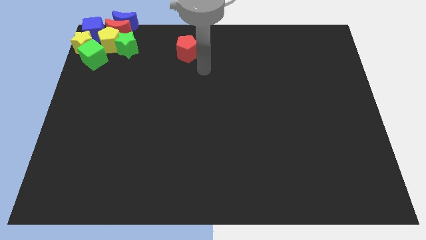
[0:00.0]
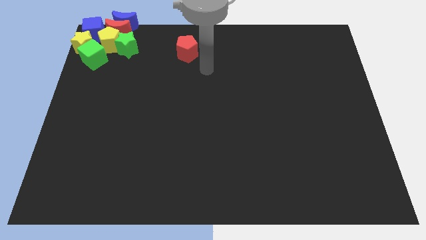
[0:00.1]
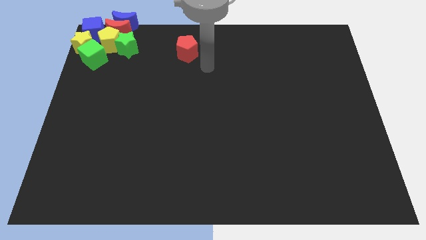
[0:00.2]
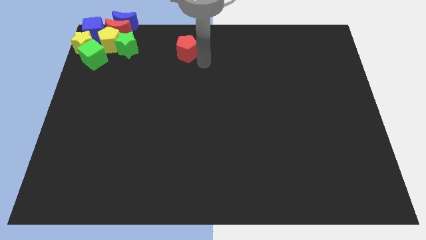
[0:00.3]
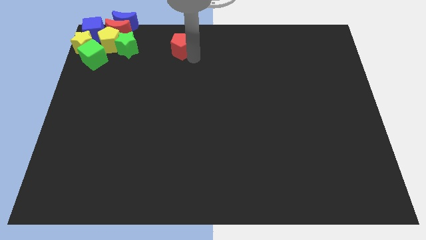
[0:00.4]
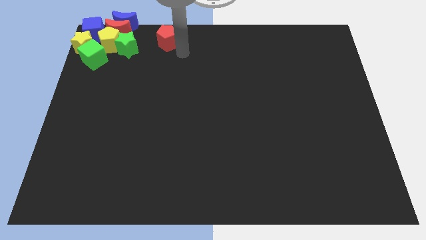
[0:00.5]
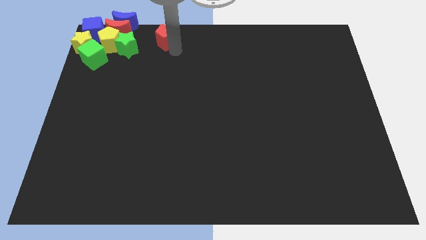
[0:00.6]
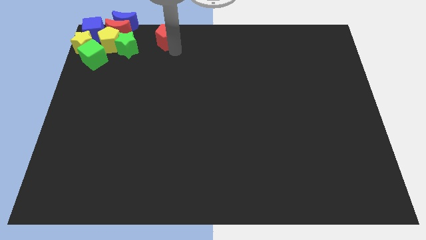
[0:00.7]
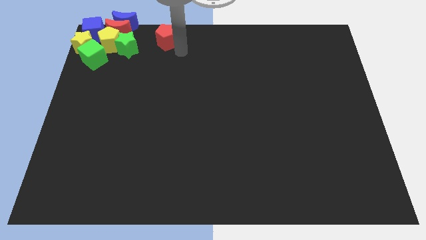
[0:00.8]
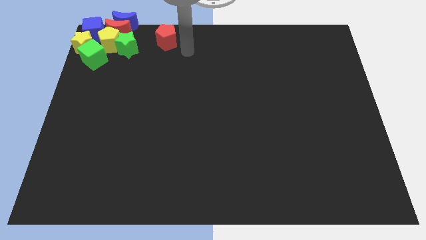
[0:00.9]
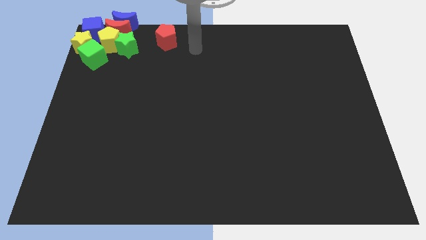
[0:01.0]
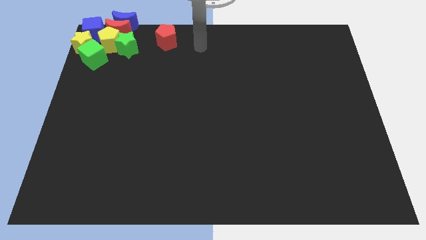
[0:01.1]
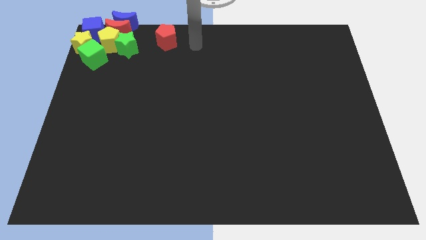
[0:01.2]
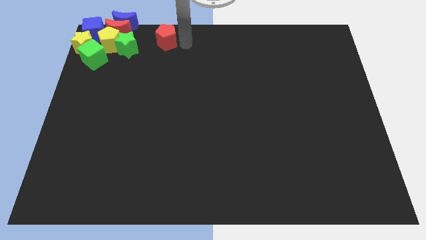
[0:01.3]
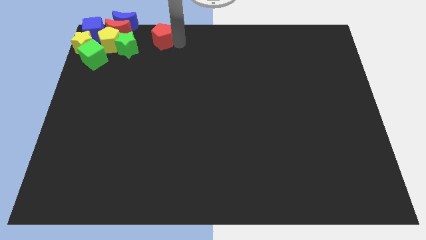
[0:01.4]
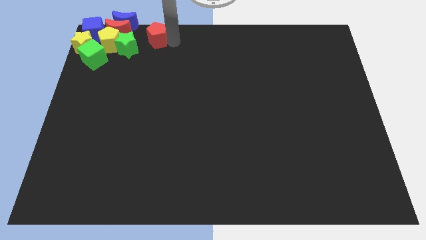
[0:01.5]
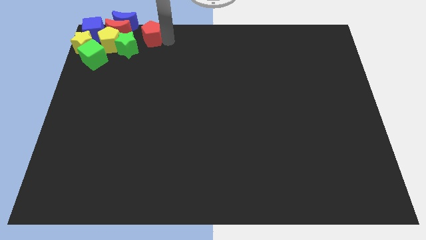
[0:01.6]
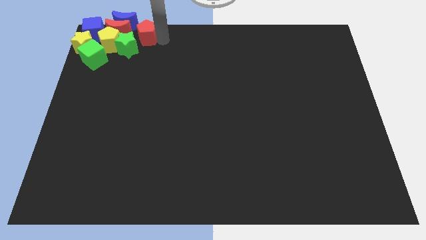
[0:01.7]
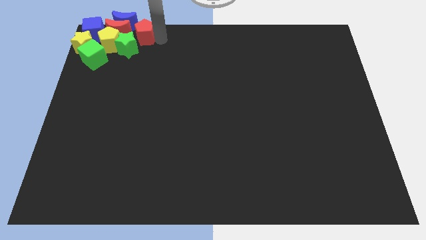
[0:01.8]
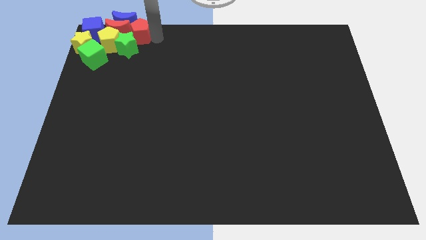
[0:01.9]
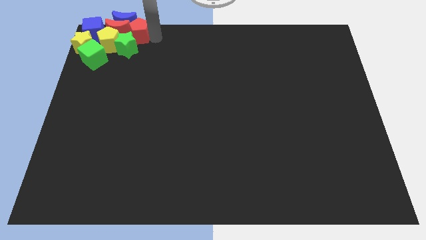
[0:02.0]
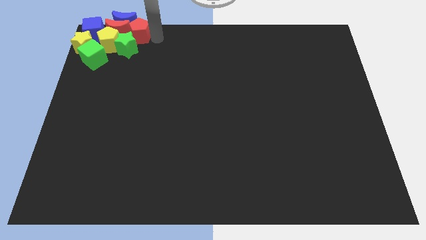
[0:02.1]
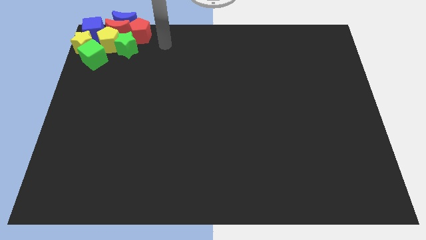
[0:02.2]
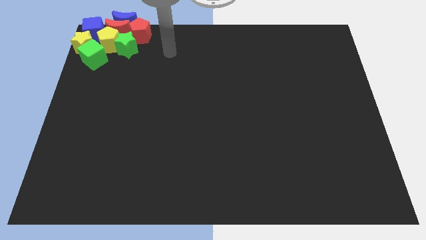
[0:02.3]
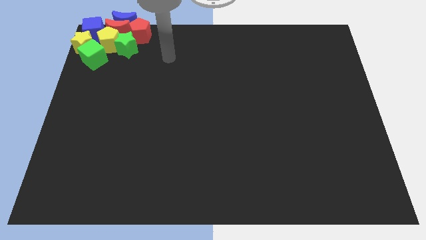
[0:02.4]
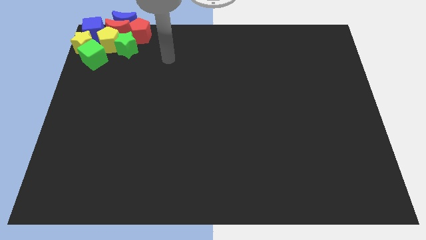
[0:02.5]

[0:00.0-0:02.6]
push red pentagon to the right of the red crescent

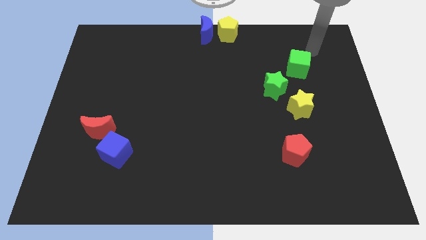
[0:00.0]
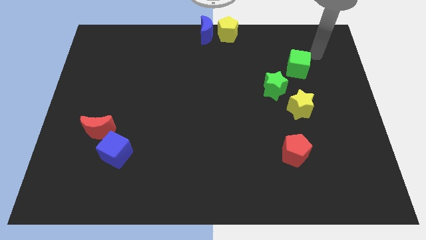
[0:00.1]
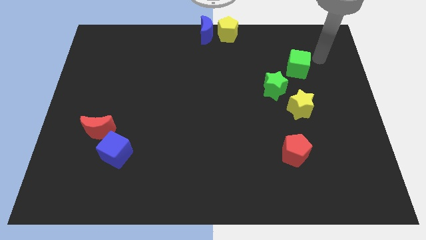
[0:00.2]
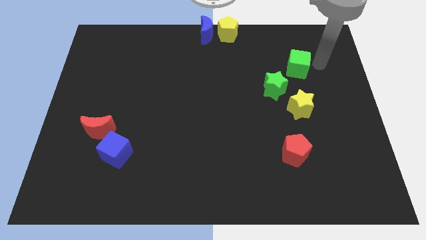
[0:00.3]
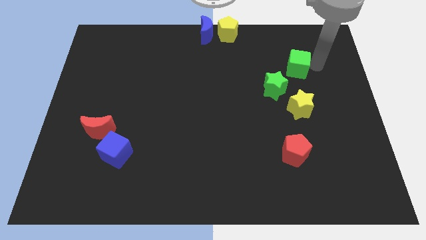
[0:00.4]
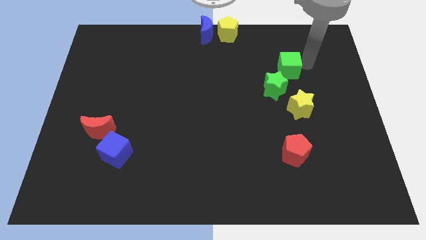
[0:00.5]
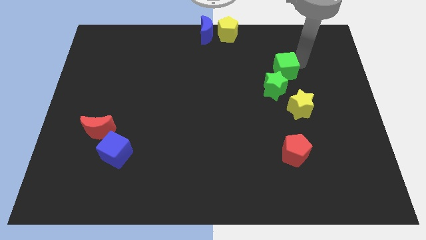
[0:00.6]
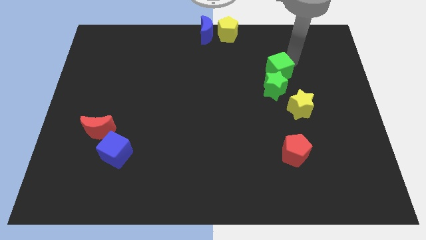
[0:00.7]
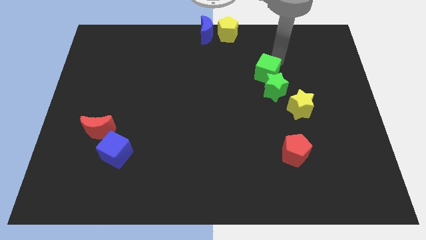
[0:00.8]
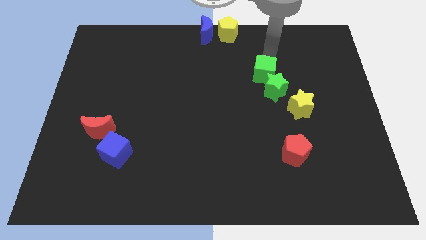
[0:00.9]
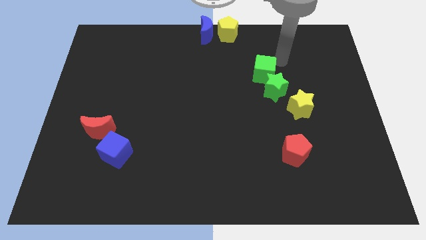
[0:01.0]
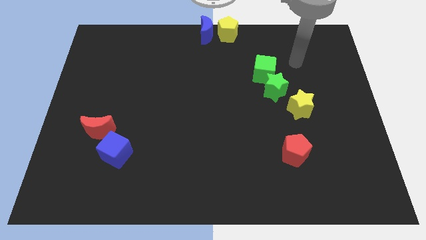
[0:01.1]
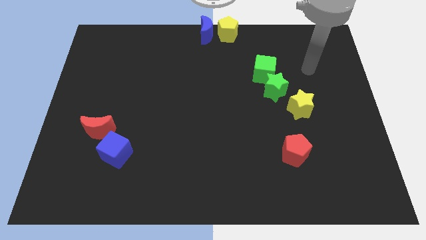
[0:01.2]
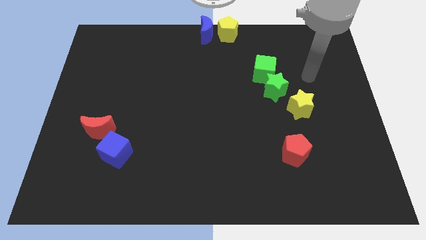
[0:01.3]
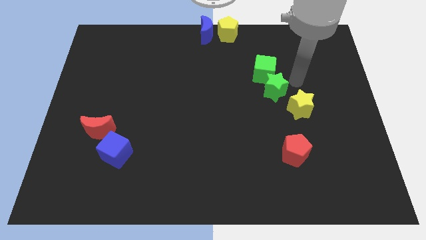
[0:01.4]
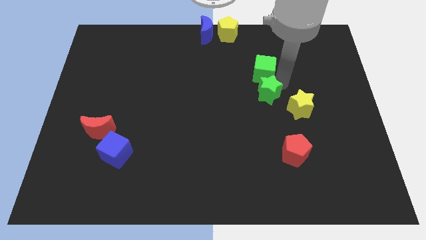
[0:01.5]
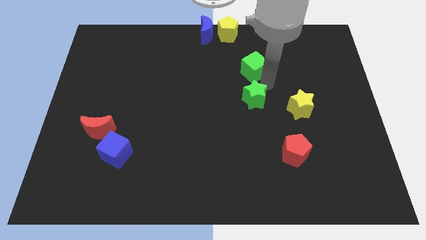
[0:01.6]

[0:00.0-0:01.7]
move the green star below the green cube

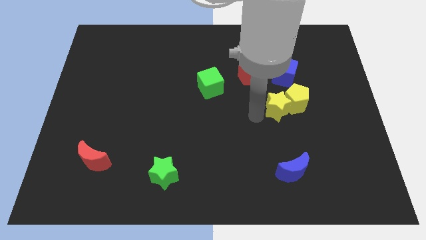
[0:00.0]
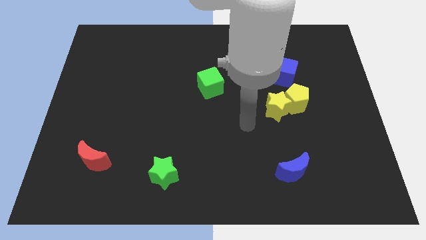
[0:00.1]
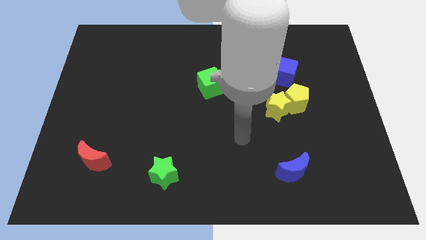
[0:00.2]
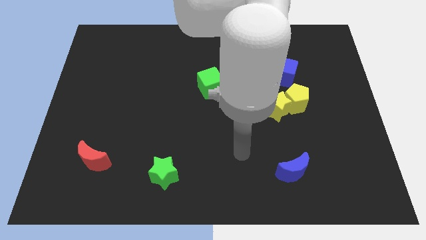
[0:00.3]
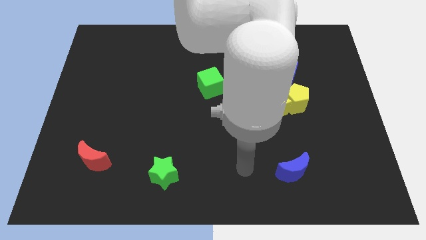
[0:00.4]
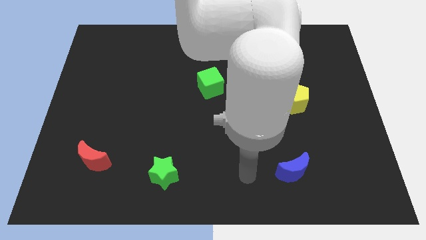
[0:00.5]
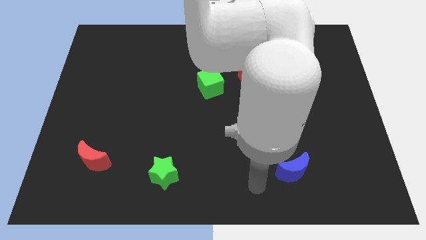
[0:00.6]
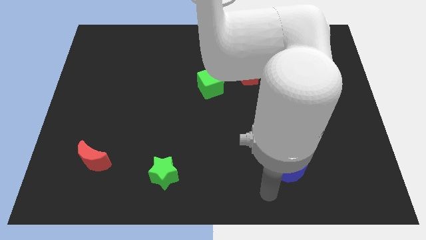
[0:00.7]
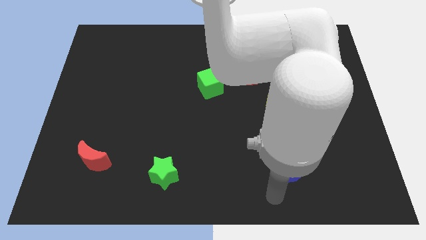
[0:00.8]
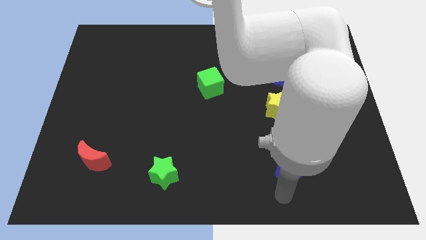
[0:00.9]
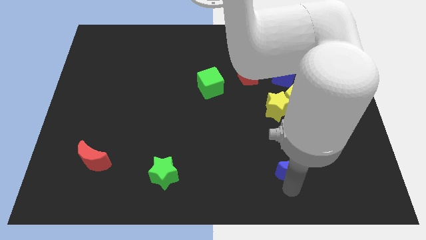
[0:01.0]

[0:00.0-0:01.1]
touch the bottom side of the blue crescent

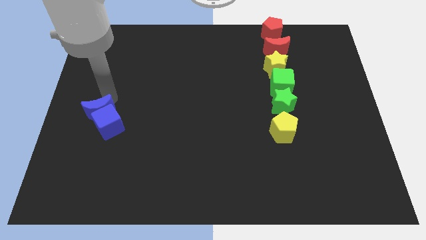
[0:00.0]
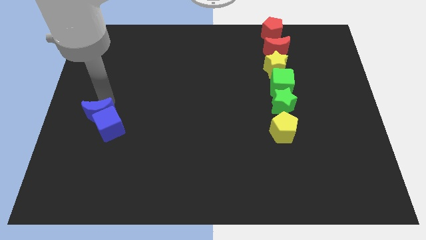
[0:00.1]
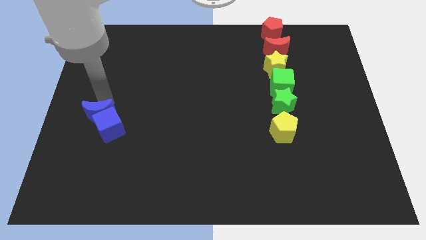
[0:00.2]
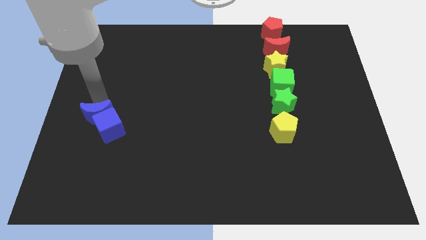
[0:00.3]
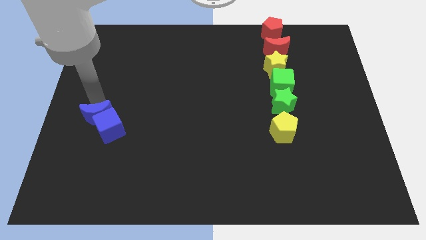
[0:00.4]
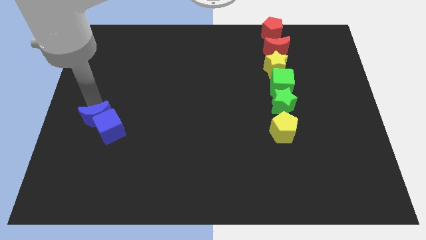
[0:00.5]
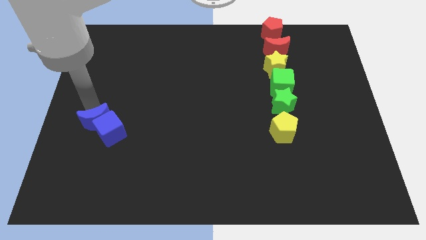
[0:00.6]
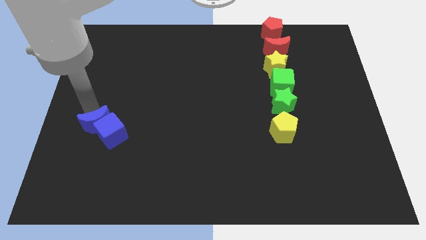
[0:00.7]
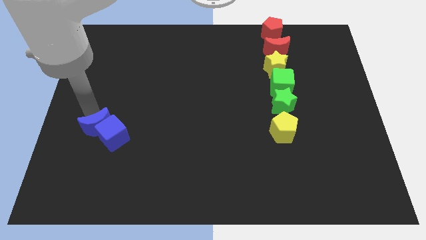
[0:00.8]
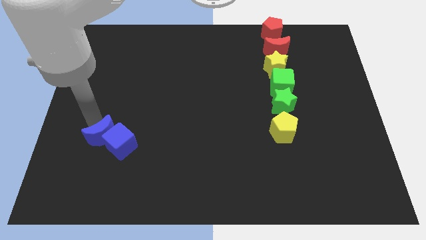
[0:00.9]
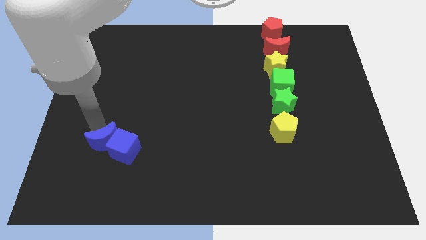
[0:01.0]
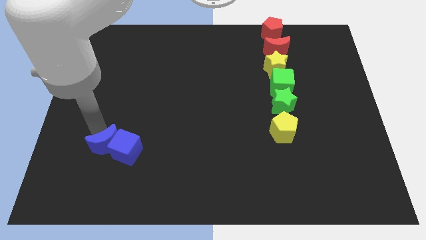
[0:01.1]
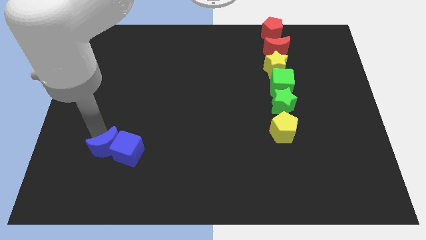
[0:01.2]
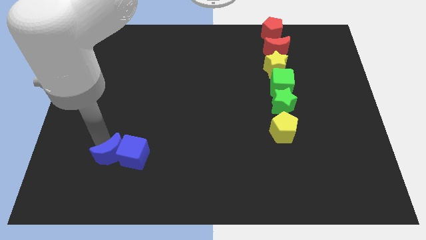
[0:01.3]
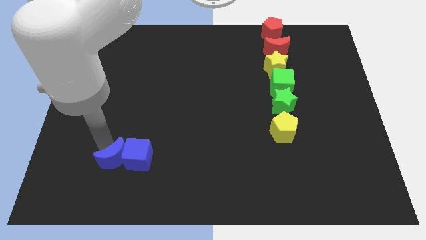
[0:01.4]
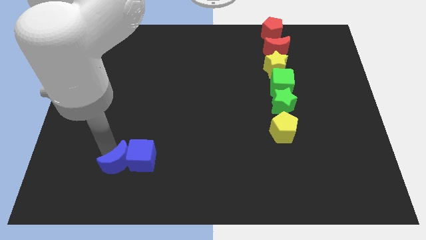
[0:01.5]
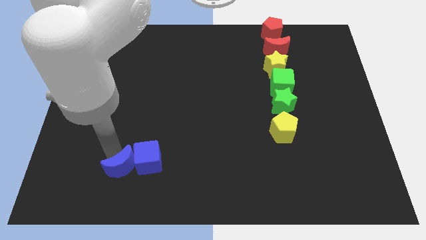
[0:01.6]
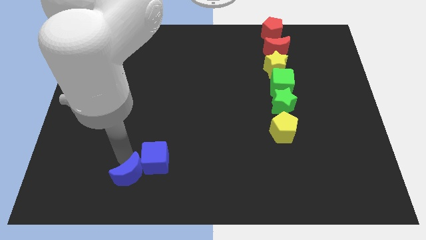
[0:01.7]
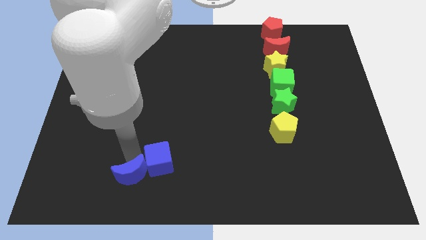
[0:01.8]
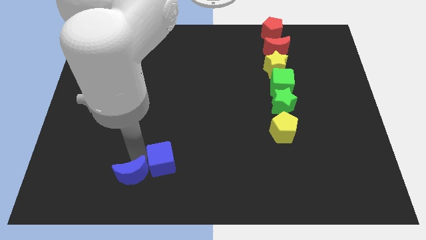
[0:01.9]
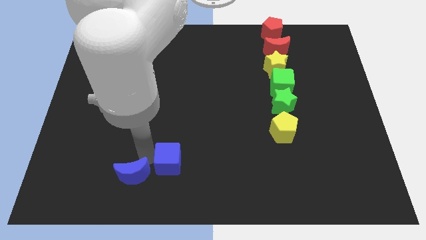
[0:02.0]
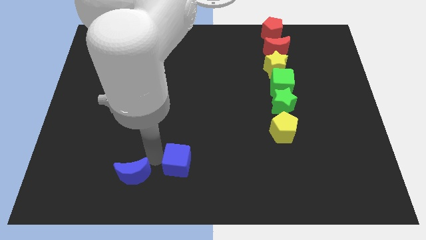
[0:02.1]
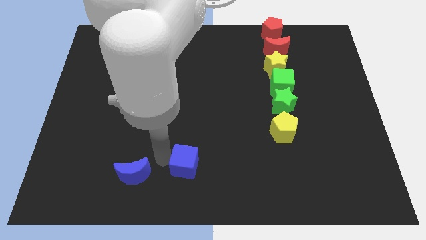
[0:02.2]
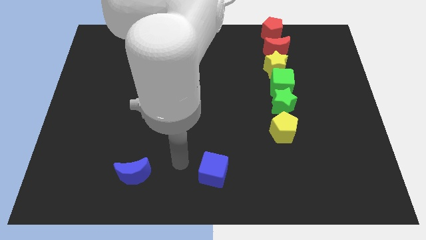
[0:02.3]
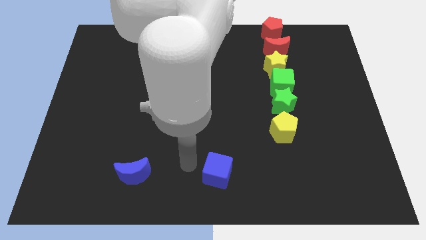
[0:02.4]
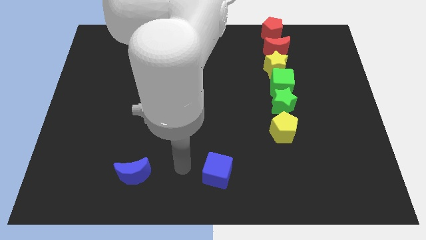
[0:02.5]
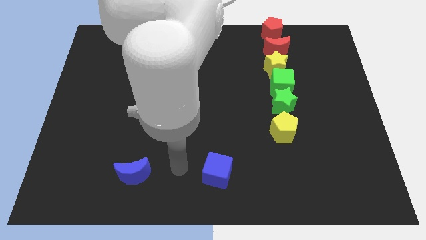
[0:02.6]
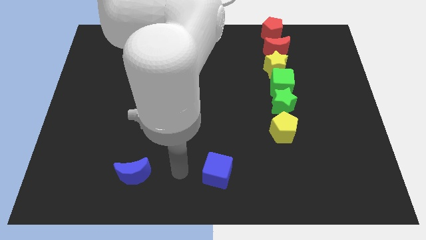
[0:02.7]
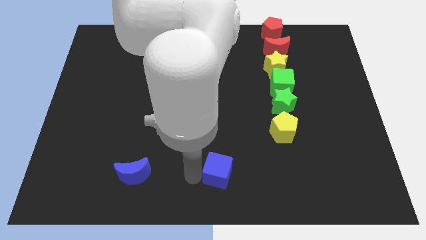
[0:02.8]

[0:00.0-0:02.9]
push blue moon and blue cube downwards

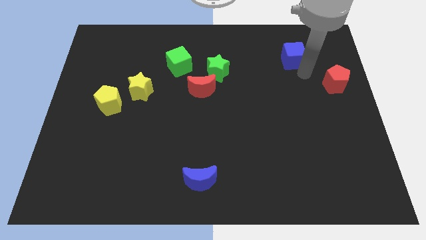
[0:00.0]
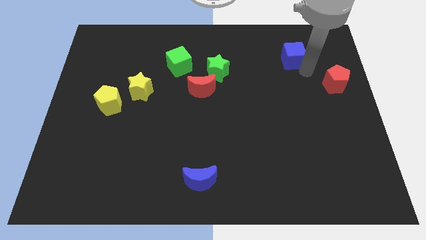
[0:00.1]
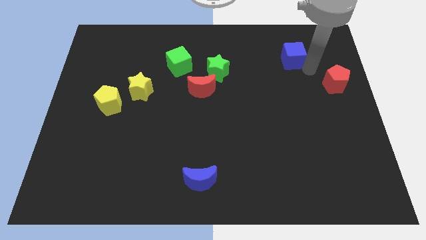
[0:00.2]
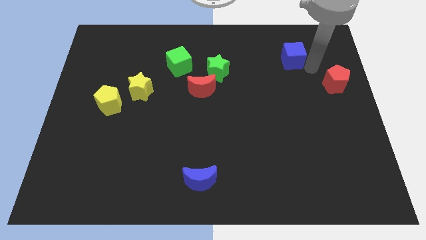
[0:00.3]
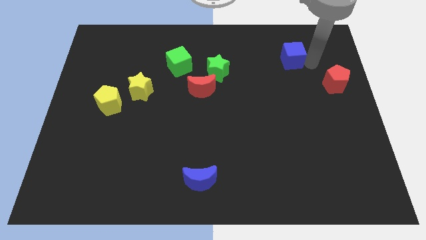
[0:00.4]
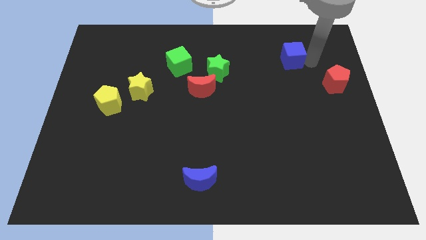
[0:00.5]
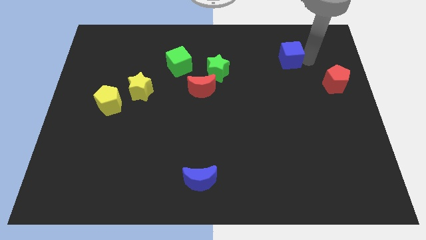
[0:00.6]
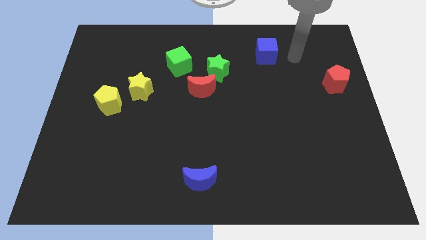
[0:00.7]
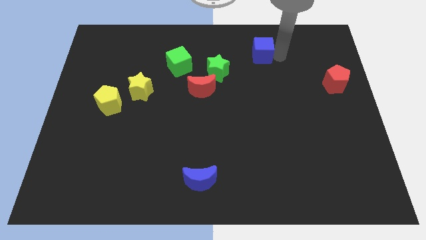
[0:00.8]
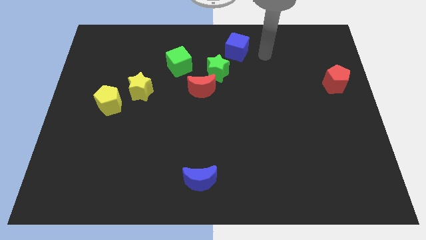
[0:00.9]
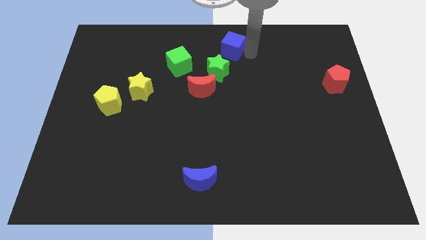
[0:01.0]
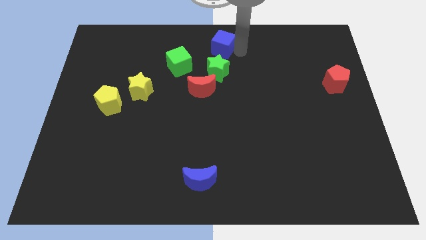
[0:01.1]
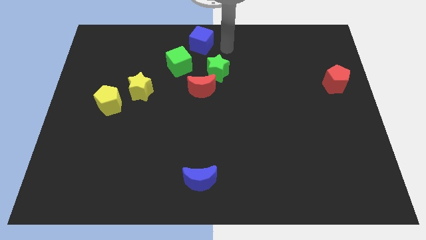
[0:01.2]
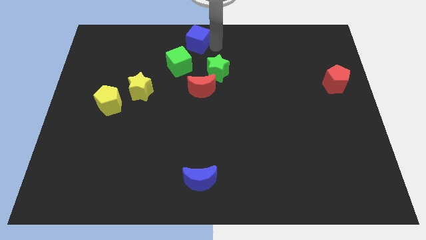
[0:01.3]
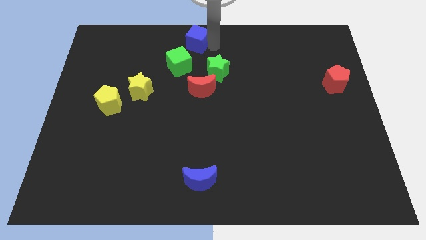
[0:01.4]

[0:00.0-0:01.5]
place the blue cube above the green cube
